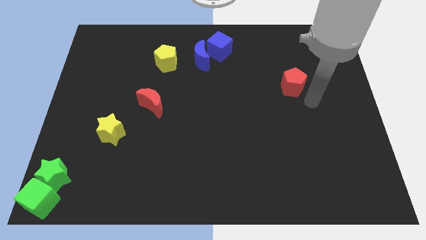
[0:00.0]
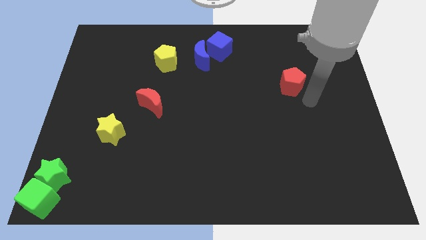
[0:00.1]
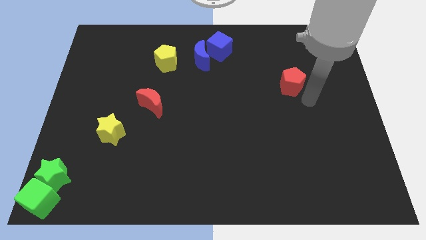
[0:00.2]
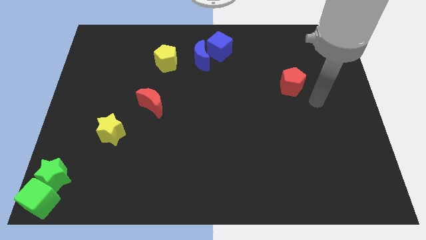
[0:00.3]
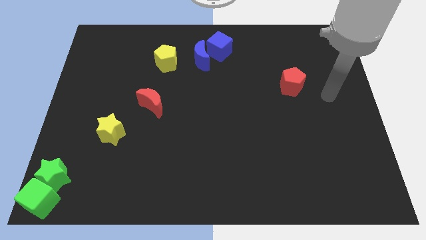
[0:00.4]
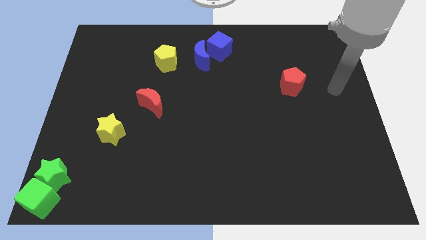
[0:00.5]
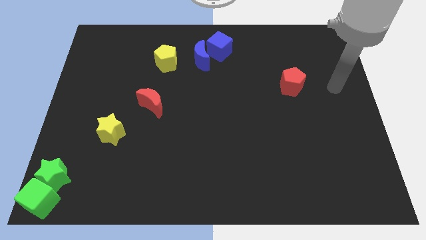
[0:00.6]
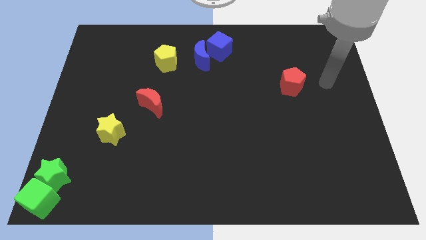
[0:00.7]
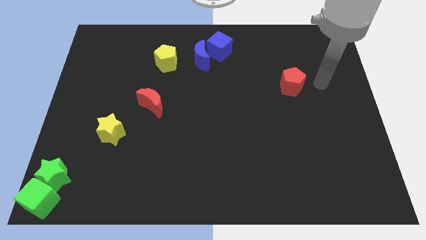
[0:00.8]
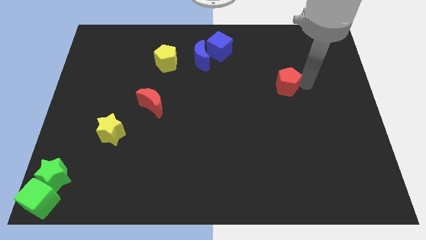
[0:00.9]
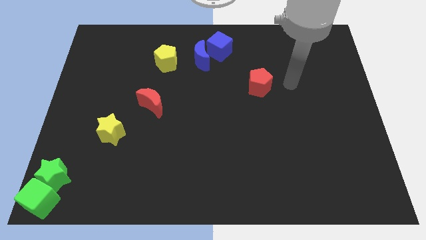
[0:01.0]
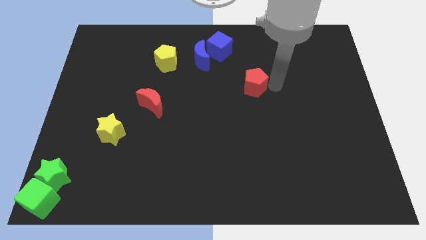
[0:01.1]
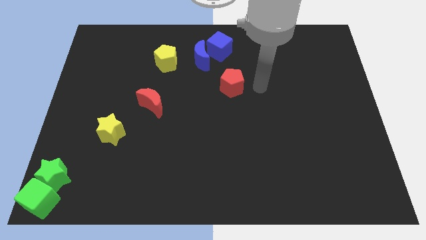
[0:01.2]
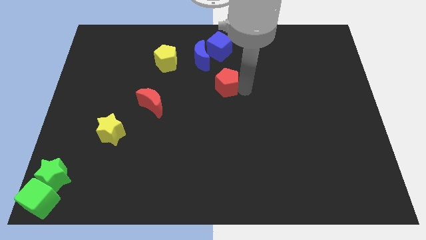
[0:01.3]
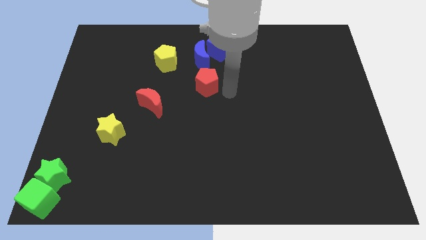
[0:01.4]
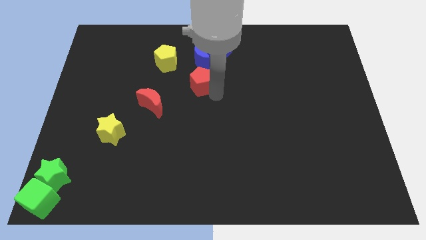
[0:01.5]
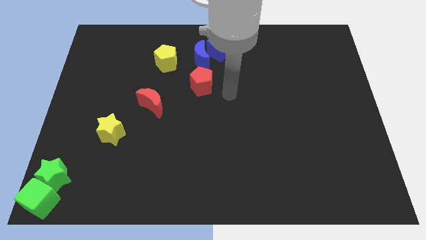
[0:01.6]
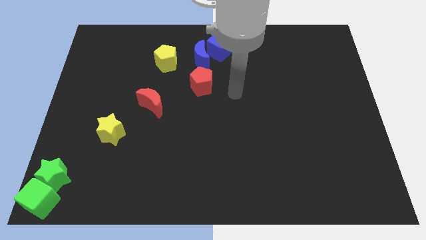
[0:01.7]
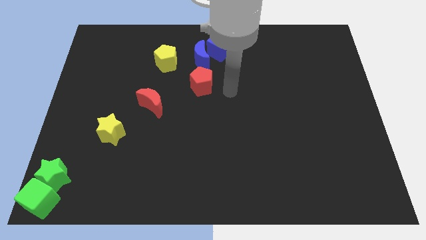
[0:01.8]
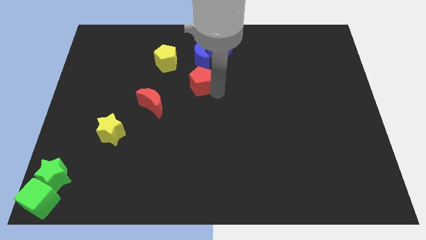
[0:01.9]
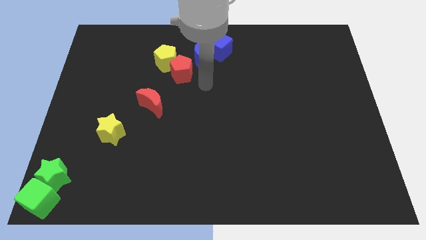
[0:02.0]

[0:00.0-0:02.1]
place the red pentagon in between blue moon and red moon

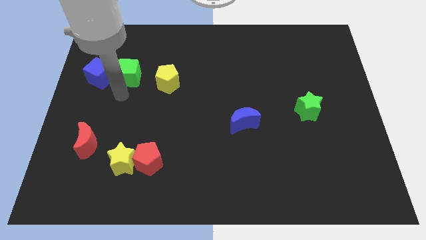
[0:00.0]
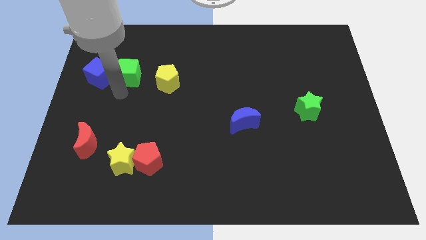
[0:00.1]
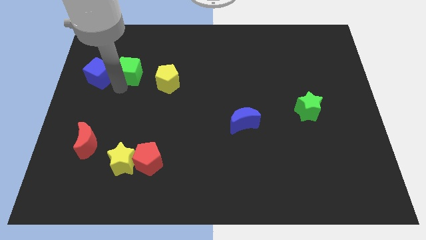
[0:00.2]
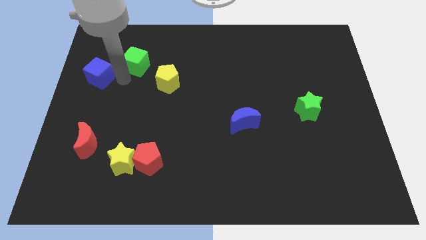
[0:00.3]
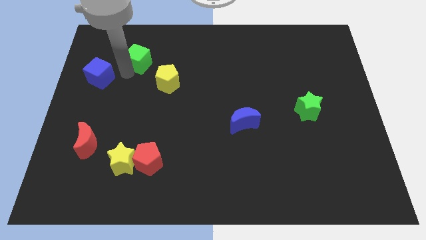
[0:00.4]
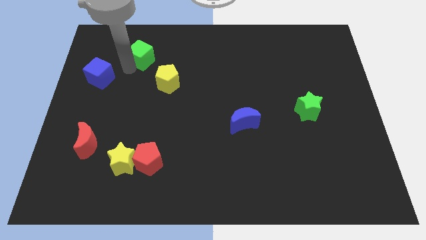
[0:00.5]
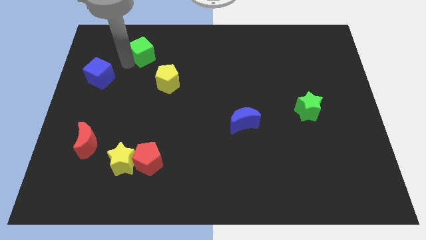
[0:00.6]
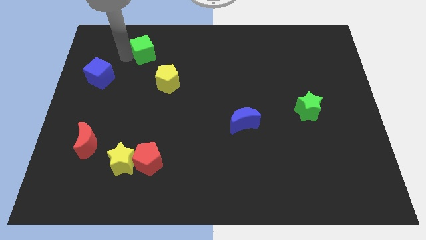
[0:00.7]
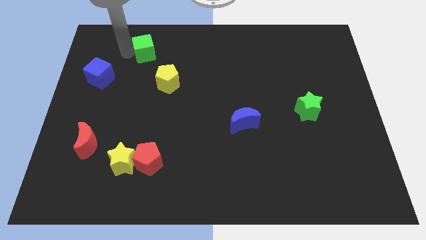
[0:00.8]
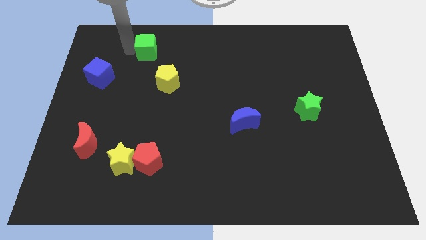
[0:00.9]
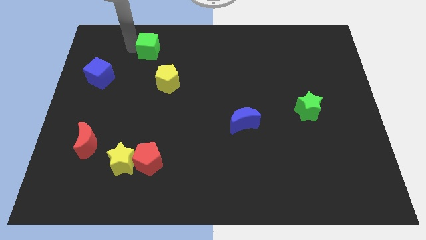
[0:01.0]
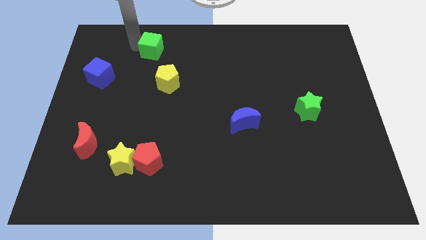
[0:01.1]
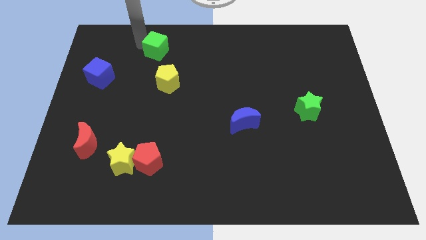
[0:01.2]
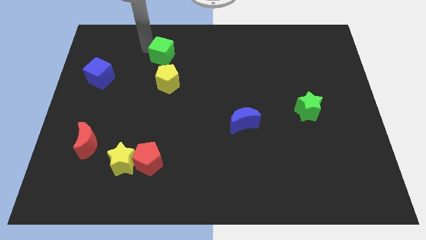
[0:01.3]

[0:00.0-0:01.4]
move the green cube at the top of the pentagon

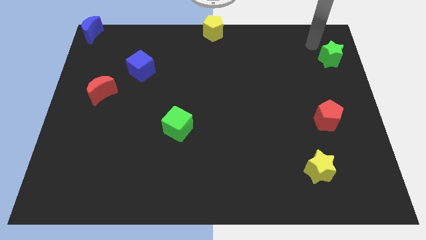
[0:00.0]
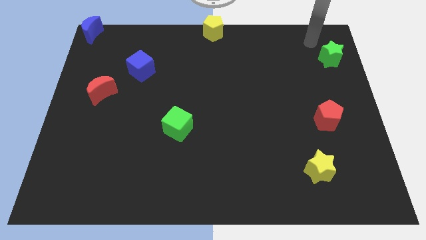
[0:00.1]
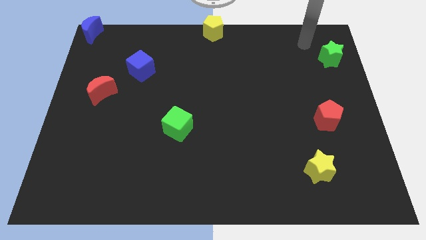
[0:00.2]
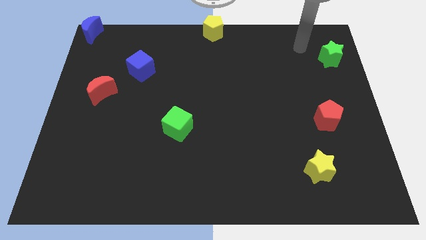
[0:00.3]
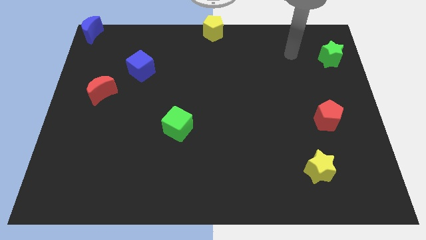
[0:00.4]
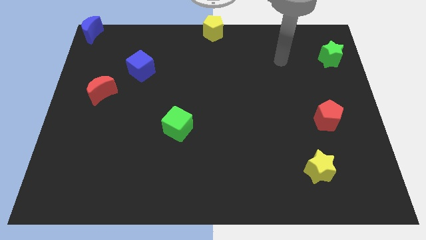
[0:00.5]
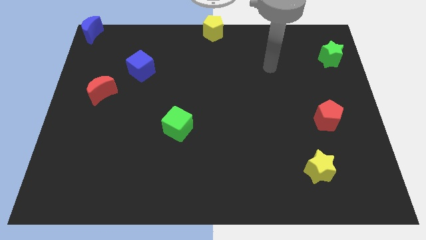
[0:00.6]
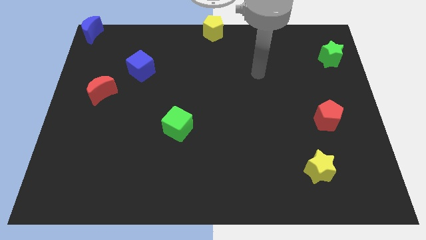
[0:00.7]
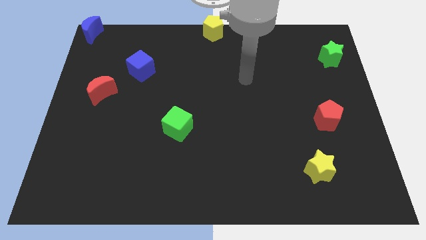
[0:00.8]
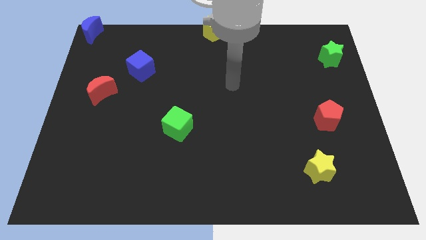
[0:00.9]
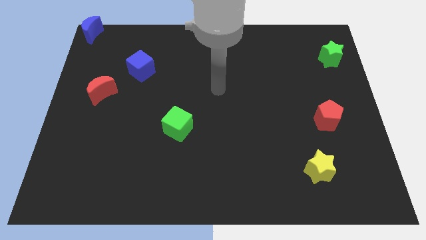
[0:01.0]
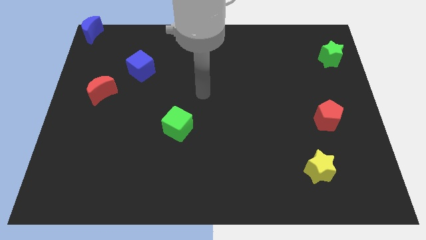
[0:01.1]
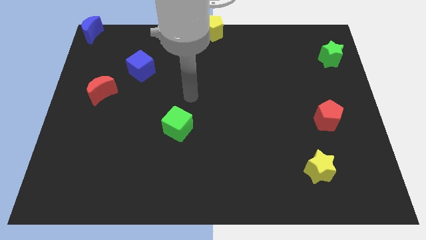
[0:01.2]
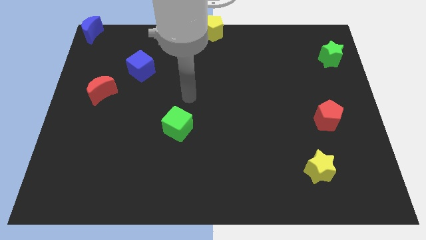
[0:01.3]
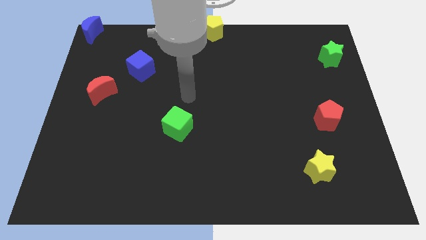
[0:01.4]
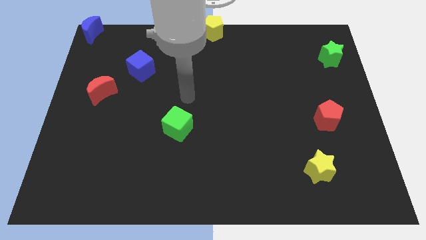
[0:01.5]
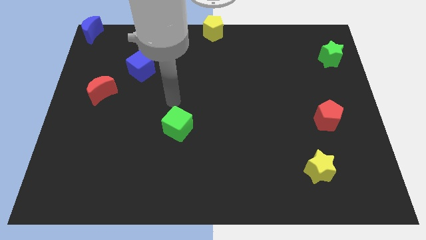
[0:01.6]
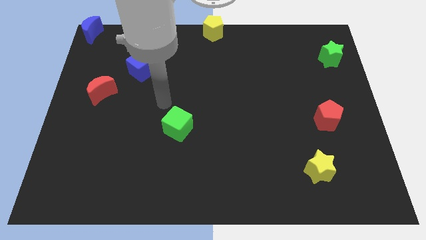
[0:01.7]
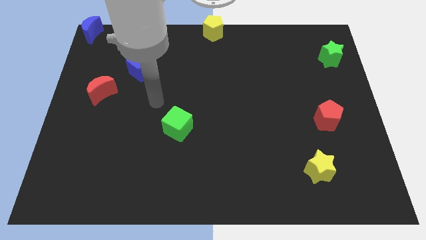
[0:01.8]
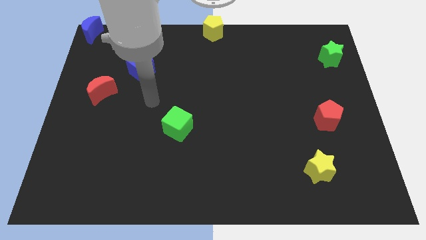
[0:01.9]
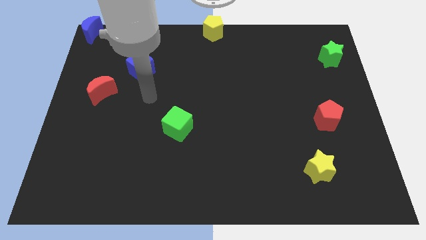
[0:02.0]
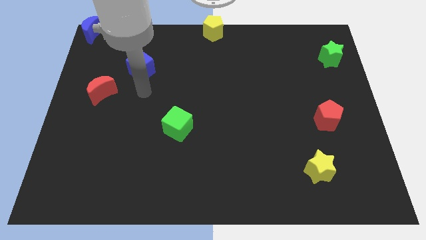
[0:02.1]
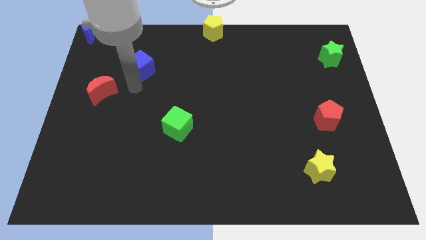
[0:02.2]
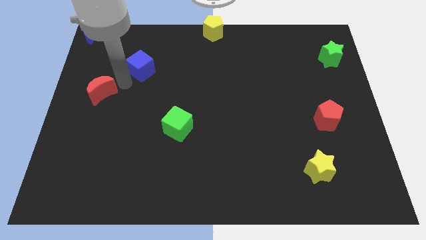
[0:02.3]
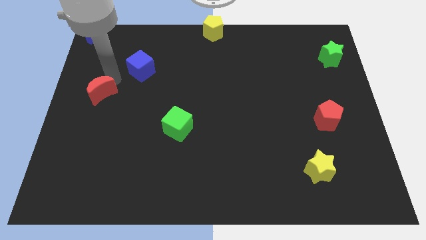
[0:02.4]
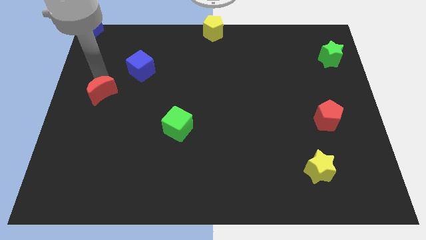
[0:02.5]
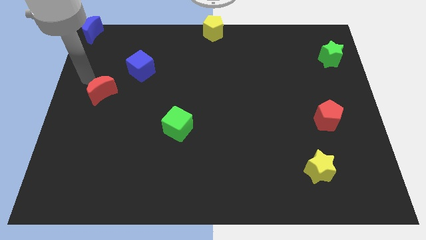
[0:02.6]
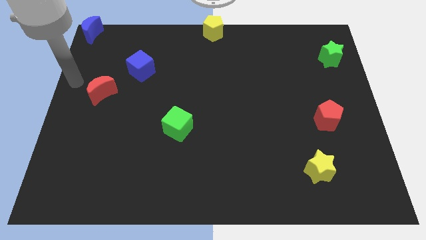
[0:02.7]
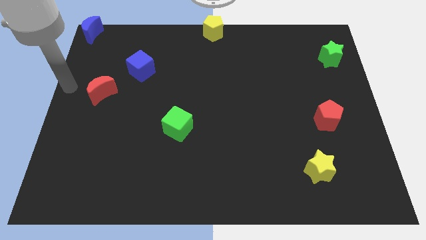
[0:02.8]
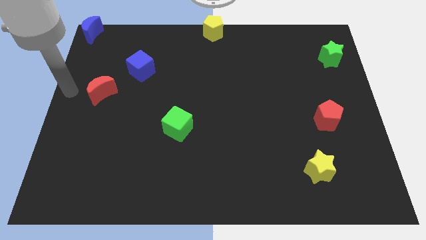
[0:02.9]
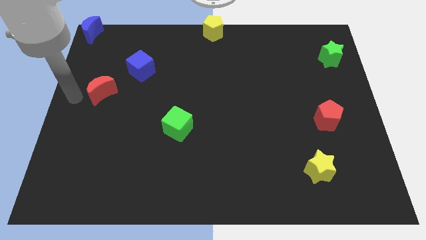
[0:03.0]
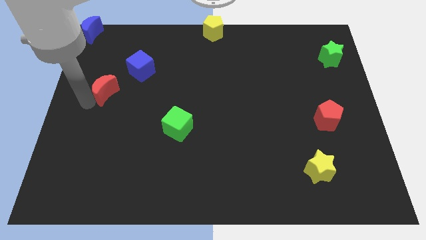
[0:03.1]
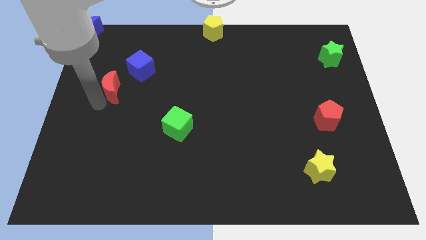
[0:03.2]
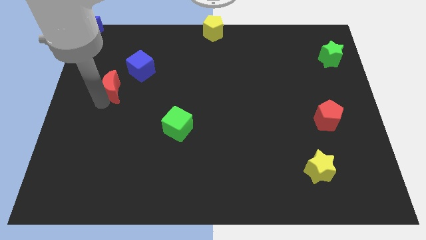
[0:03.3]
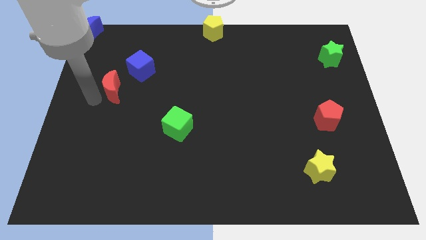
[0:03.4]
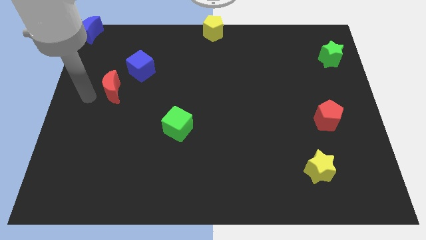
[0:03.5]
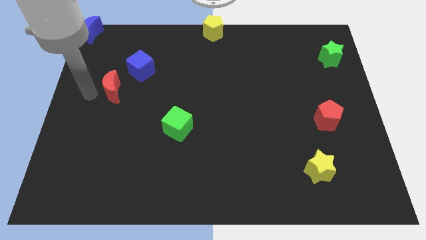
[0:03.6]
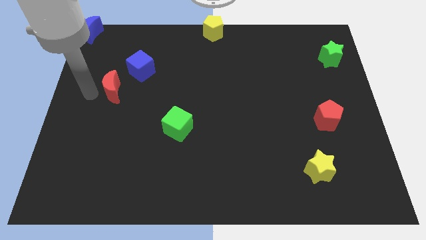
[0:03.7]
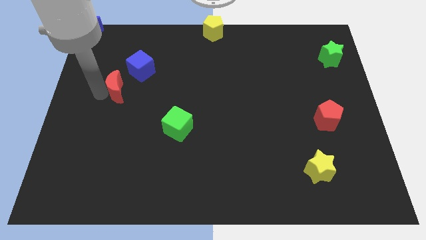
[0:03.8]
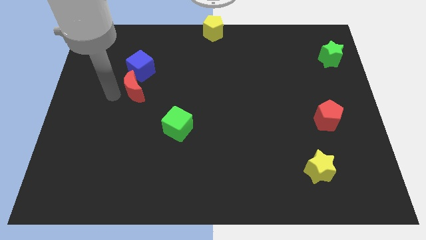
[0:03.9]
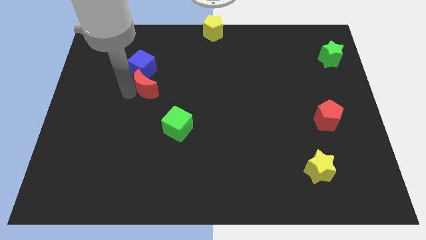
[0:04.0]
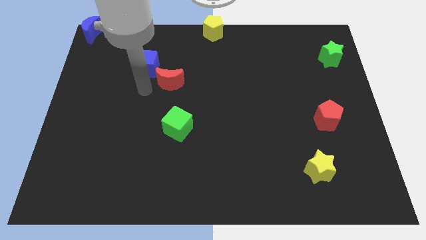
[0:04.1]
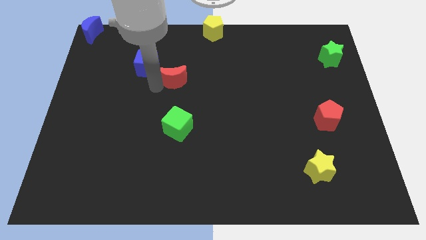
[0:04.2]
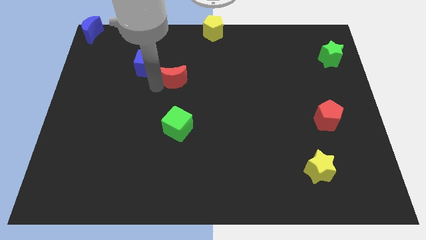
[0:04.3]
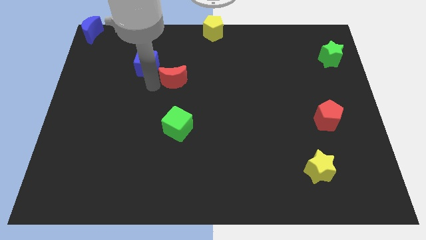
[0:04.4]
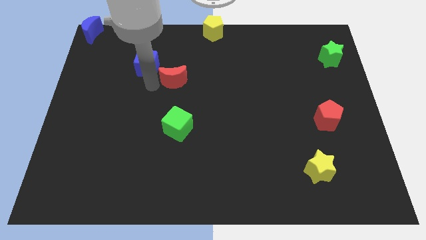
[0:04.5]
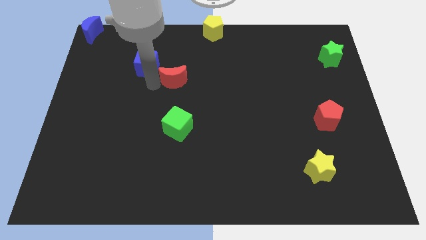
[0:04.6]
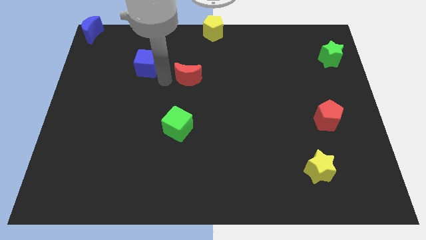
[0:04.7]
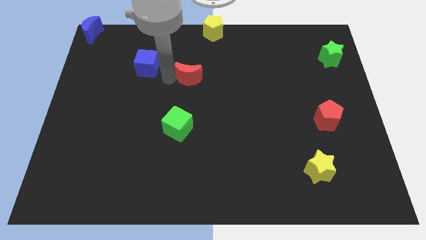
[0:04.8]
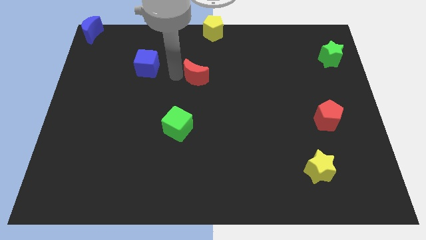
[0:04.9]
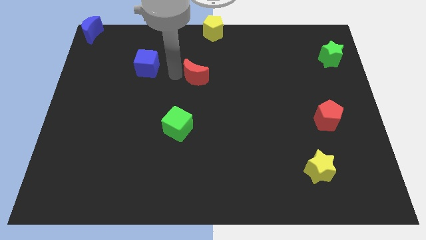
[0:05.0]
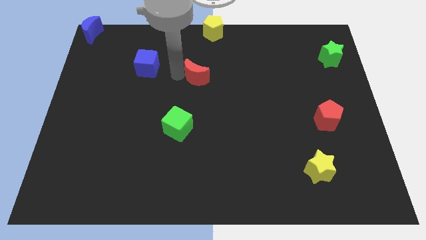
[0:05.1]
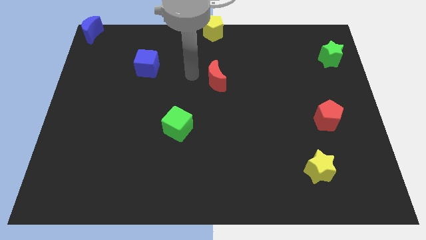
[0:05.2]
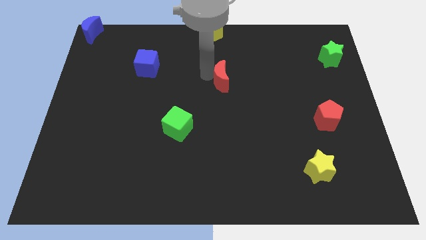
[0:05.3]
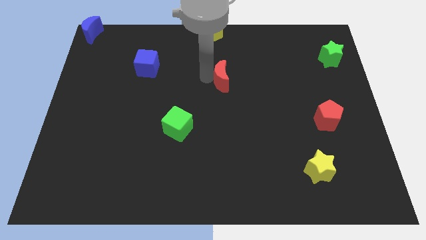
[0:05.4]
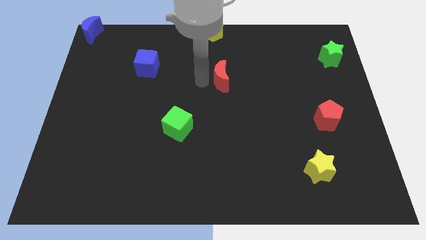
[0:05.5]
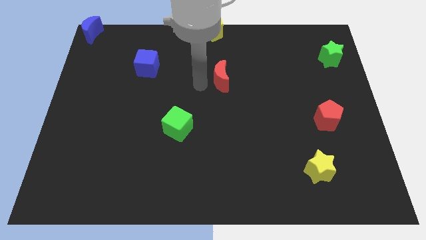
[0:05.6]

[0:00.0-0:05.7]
place the red crescent below the yellow pentagon
